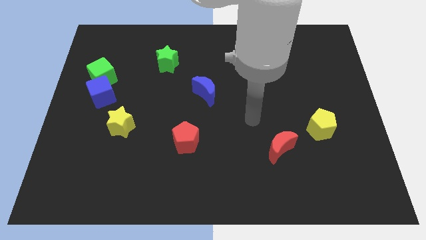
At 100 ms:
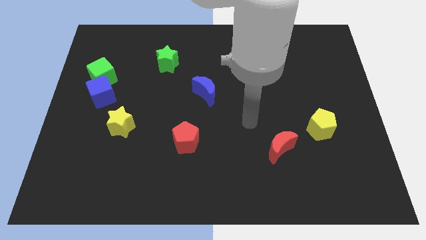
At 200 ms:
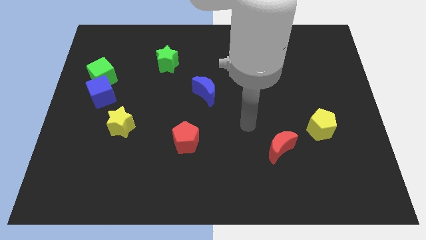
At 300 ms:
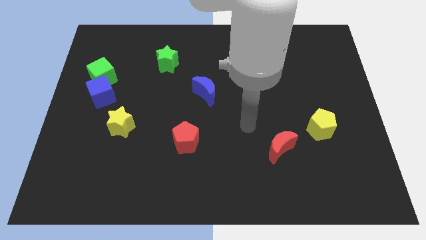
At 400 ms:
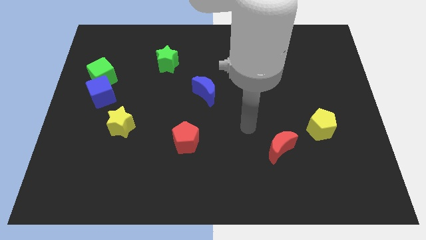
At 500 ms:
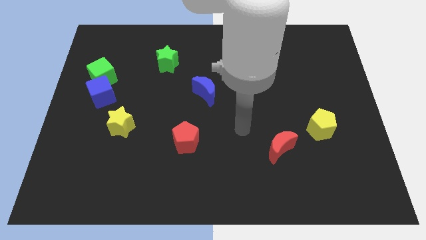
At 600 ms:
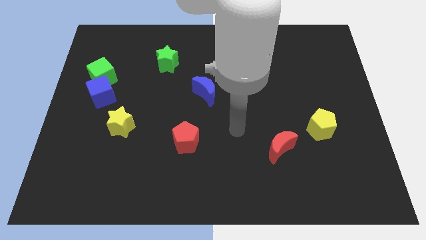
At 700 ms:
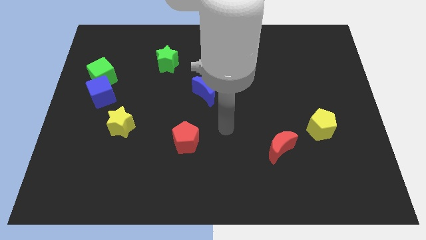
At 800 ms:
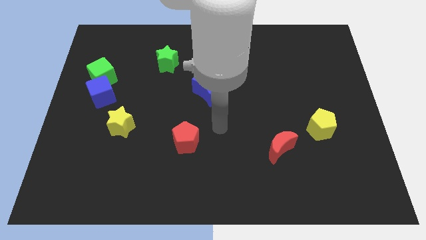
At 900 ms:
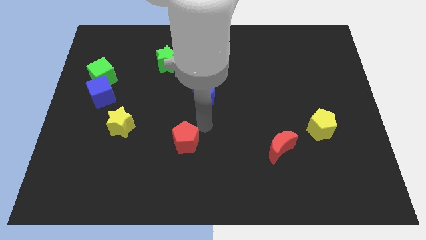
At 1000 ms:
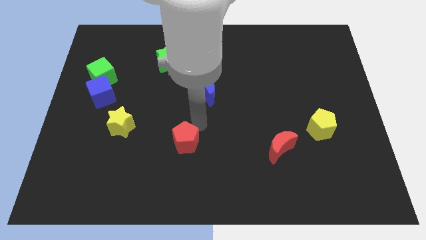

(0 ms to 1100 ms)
slide your arm to the top right of red pentagon

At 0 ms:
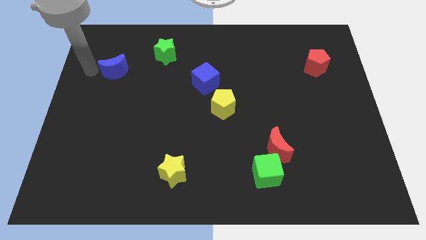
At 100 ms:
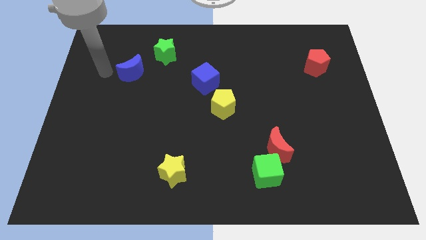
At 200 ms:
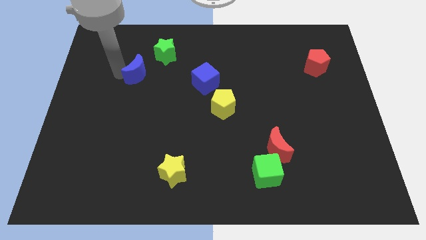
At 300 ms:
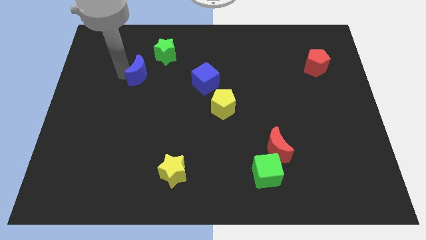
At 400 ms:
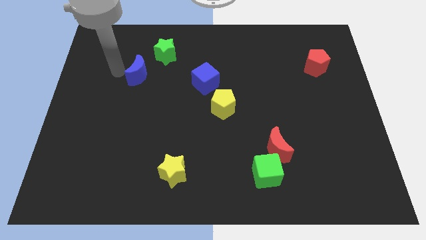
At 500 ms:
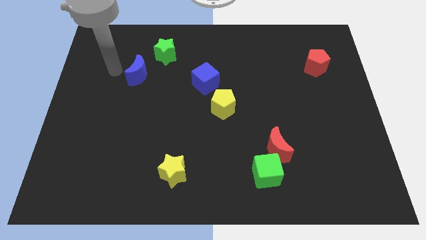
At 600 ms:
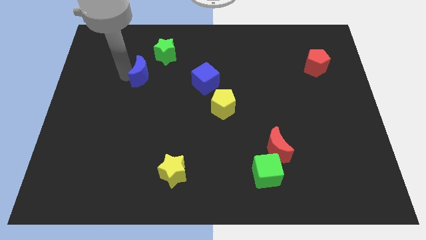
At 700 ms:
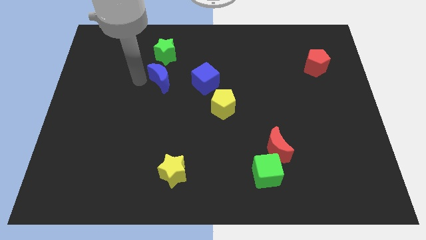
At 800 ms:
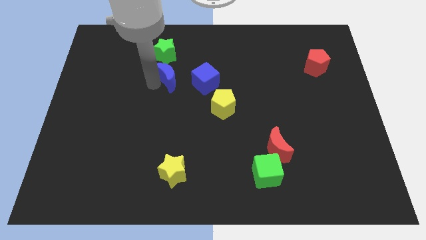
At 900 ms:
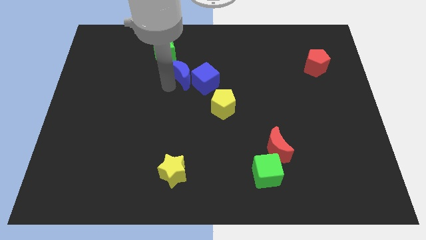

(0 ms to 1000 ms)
move the blue crescent to the left side of the blue block

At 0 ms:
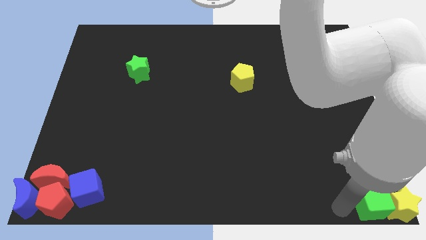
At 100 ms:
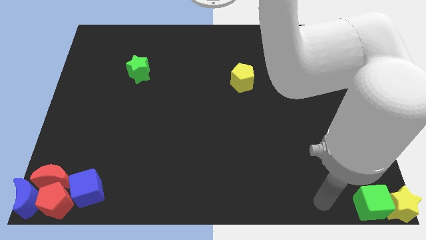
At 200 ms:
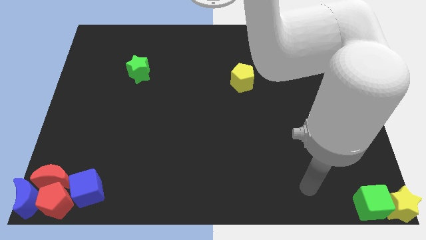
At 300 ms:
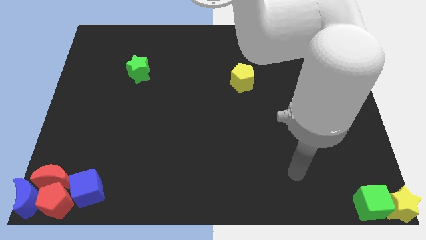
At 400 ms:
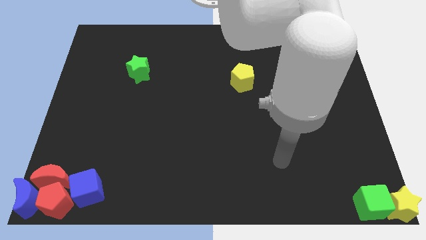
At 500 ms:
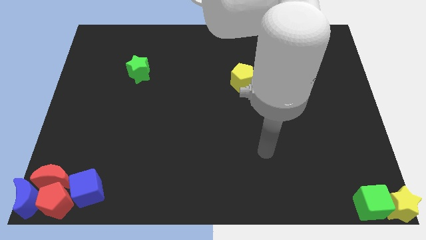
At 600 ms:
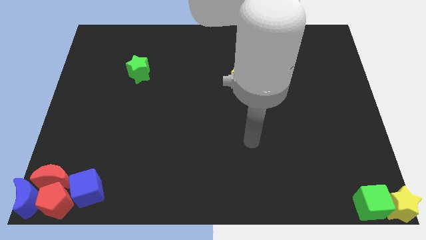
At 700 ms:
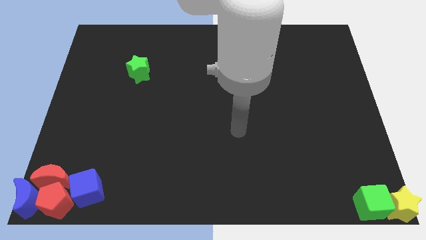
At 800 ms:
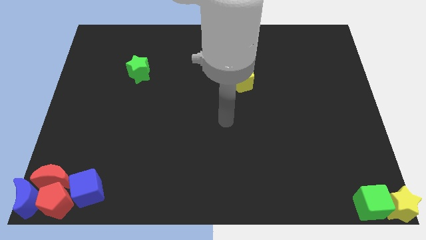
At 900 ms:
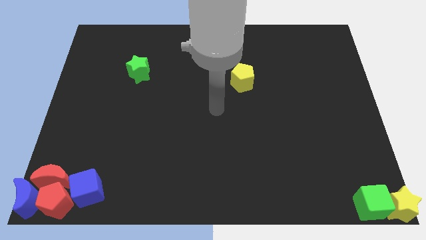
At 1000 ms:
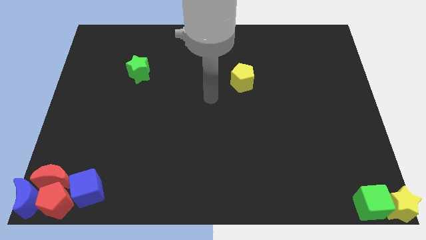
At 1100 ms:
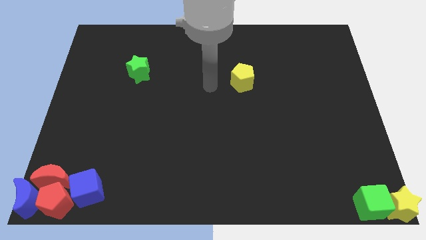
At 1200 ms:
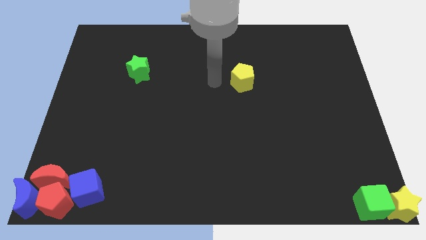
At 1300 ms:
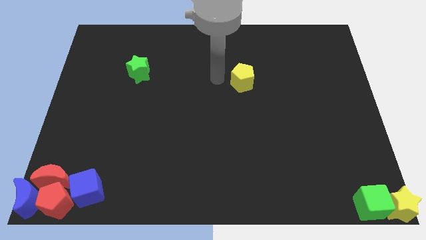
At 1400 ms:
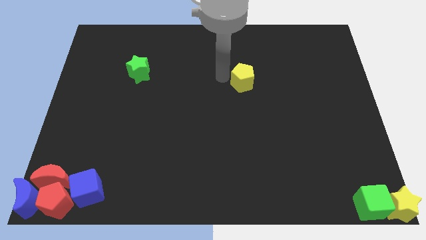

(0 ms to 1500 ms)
move the arm near the yellow pentagon

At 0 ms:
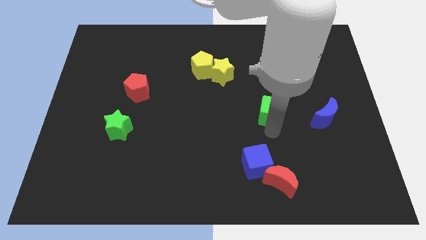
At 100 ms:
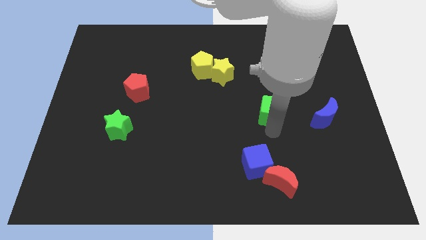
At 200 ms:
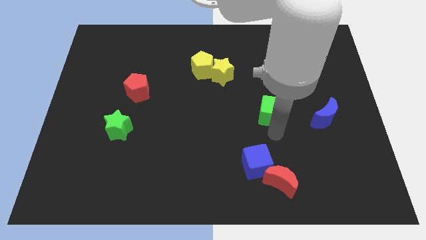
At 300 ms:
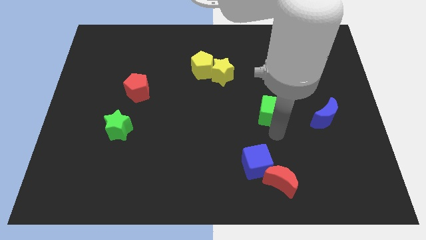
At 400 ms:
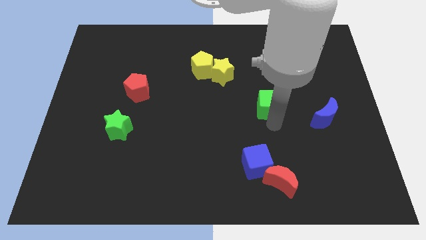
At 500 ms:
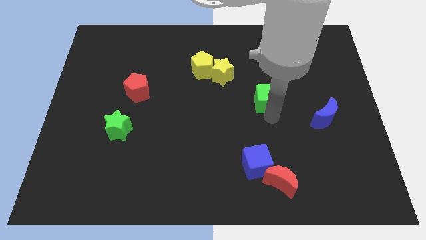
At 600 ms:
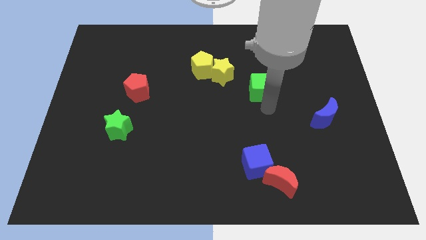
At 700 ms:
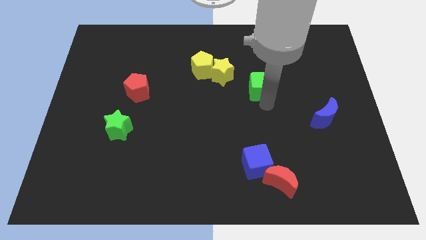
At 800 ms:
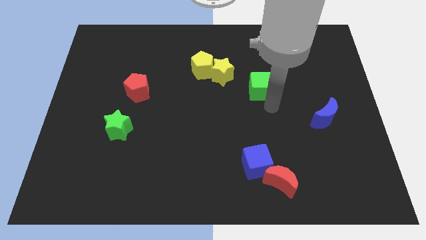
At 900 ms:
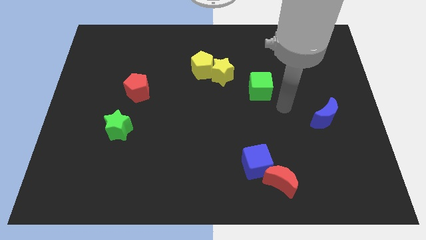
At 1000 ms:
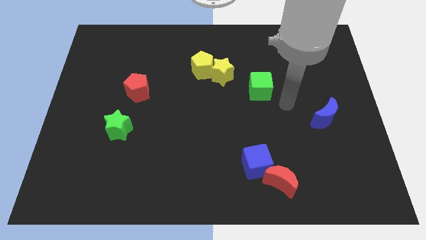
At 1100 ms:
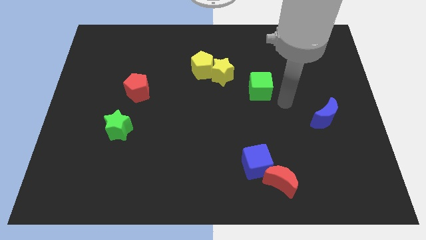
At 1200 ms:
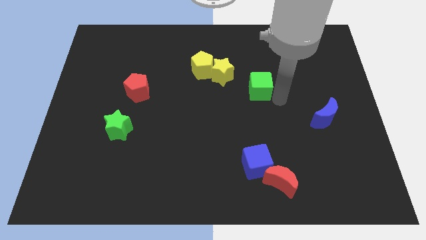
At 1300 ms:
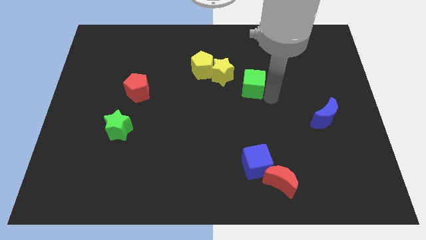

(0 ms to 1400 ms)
place the green cube towards the bottom right side of the yellow star

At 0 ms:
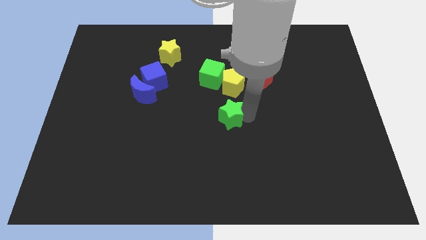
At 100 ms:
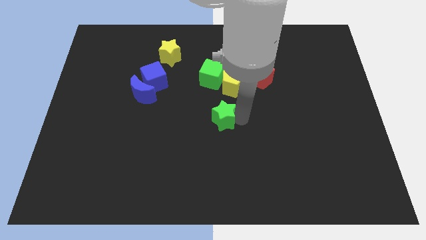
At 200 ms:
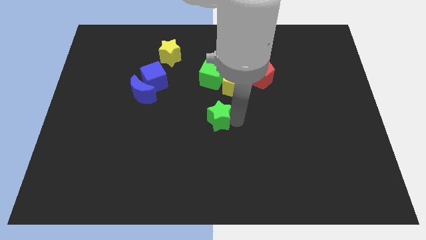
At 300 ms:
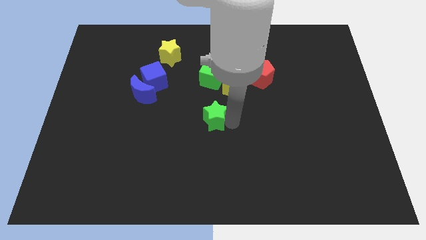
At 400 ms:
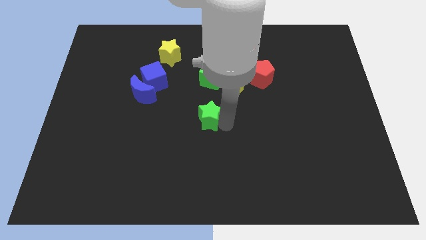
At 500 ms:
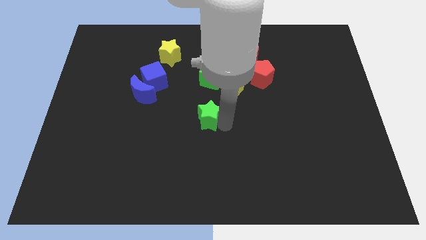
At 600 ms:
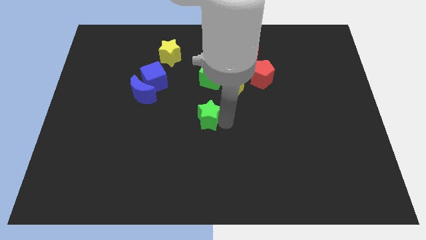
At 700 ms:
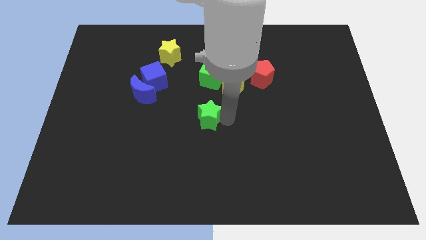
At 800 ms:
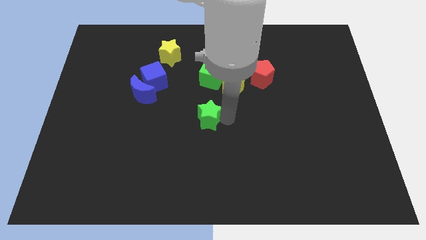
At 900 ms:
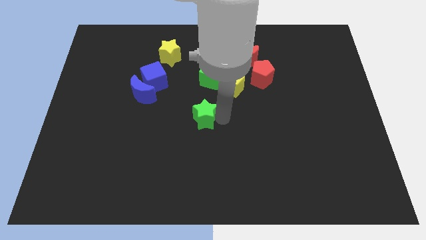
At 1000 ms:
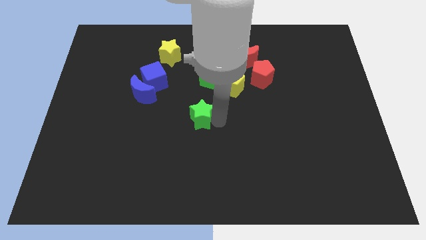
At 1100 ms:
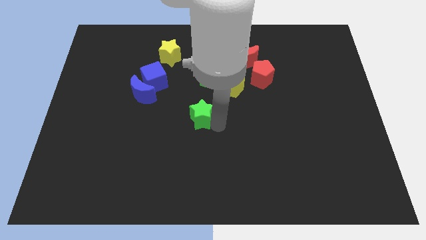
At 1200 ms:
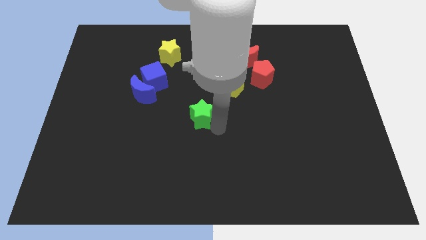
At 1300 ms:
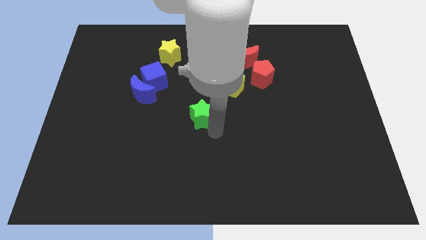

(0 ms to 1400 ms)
move the green star vertically to the green cube

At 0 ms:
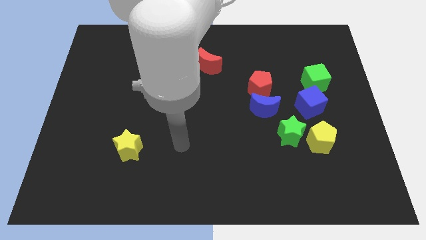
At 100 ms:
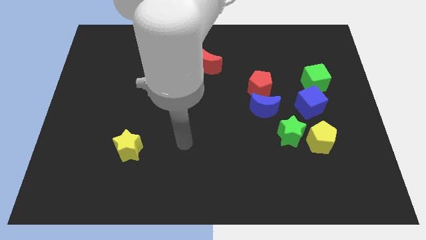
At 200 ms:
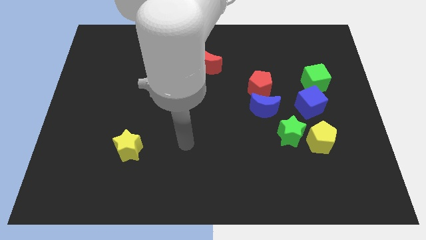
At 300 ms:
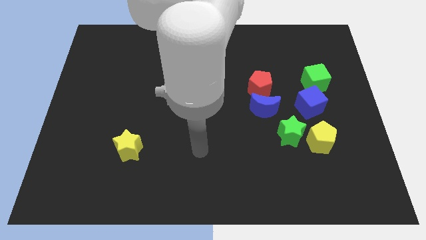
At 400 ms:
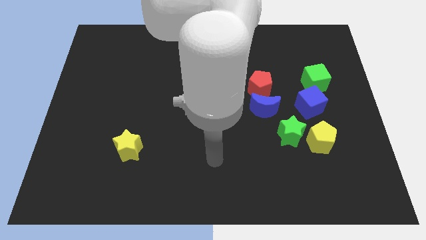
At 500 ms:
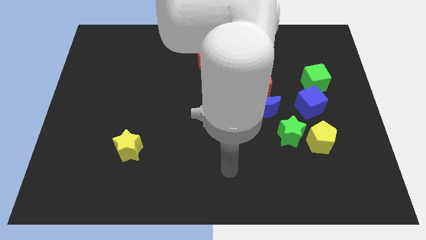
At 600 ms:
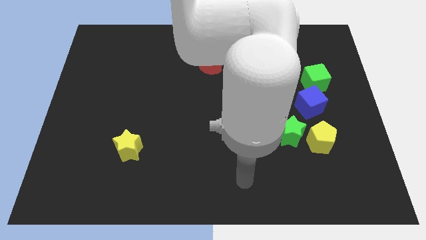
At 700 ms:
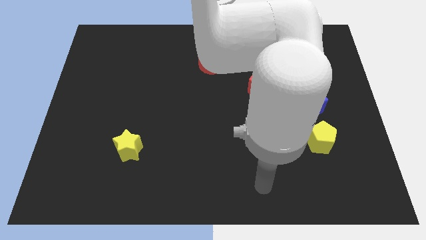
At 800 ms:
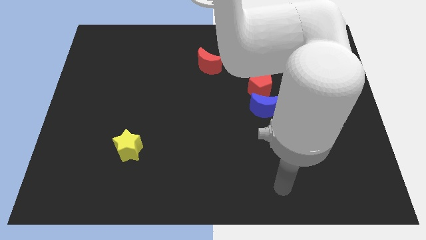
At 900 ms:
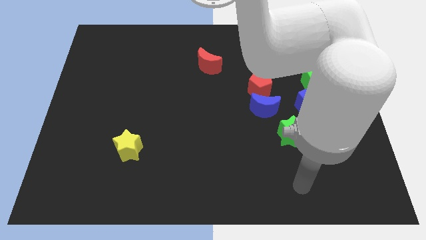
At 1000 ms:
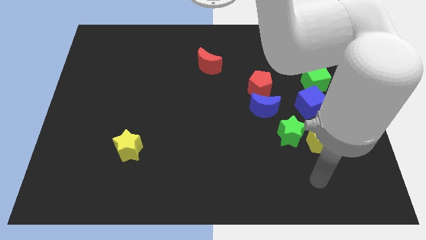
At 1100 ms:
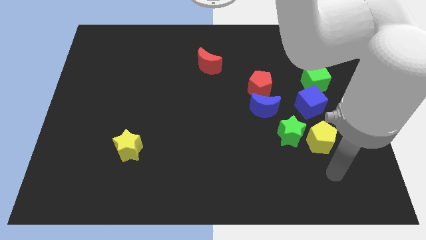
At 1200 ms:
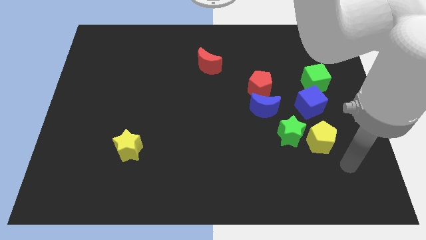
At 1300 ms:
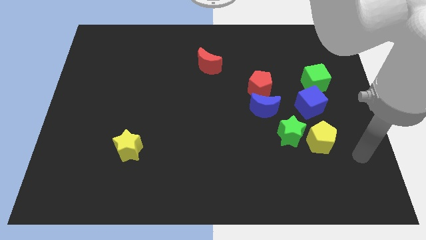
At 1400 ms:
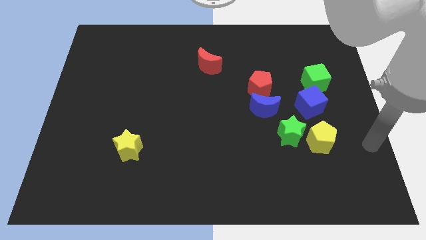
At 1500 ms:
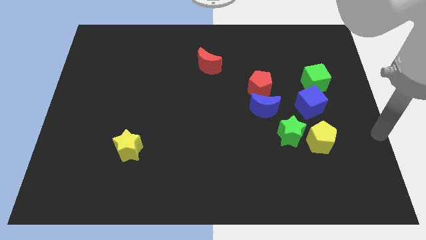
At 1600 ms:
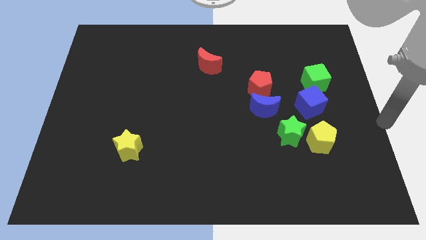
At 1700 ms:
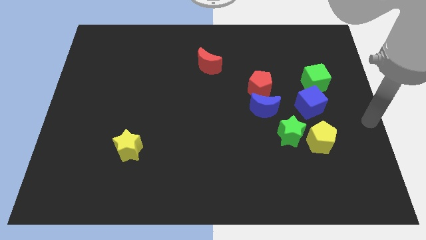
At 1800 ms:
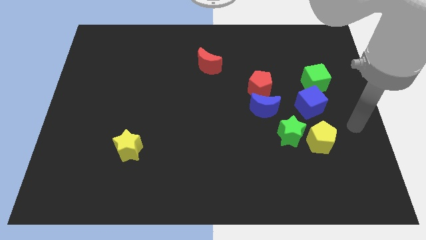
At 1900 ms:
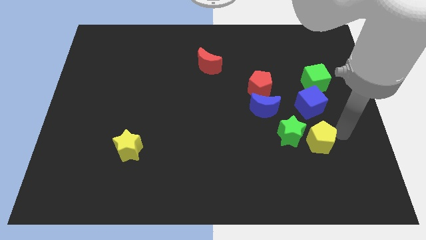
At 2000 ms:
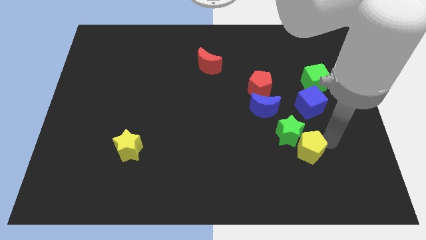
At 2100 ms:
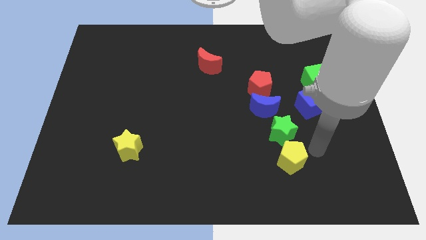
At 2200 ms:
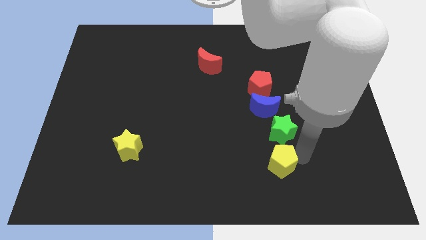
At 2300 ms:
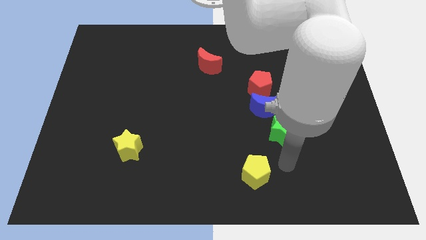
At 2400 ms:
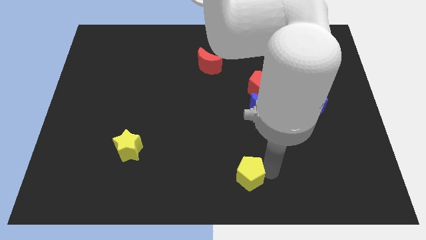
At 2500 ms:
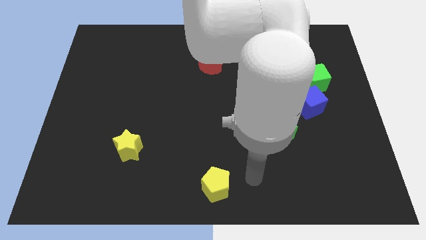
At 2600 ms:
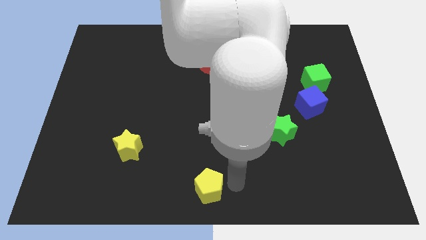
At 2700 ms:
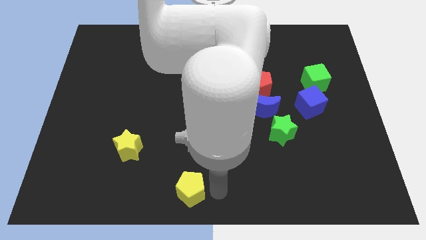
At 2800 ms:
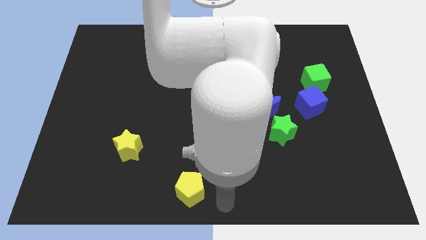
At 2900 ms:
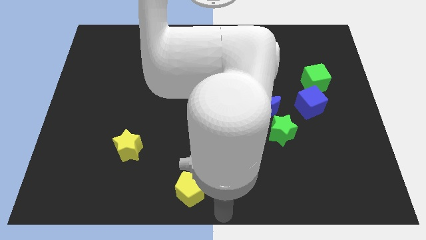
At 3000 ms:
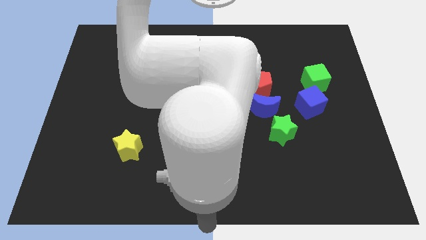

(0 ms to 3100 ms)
place the yellow pentagon at the bottom center of the board
